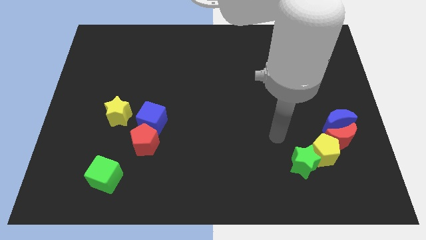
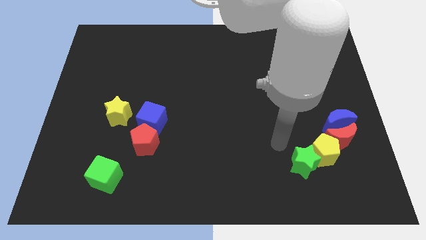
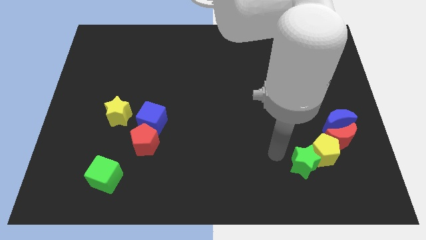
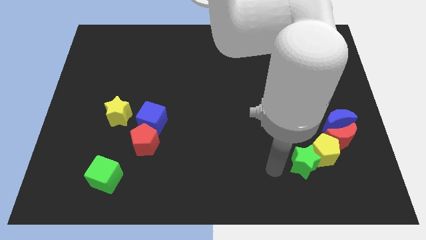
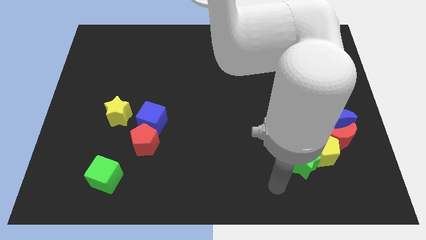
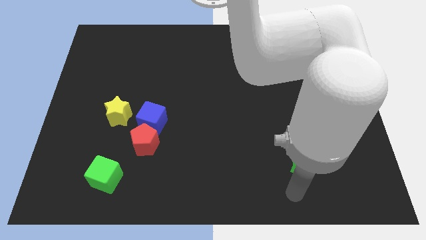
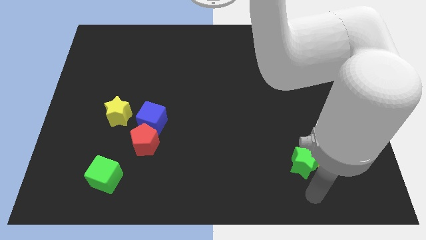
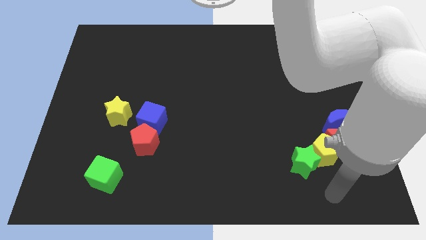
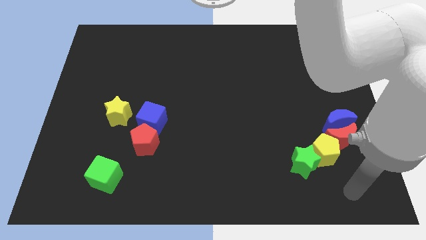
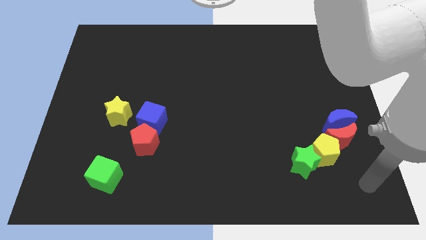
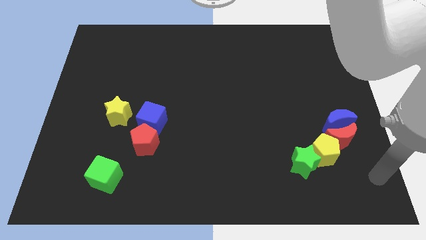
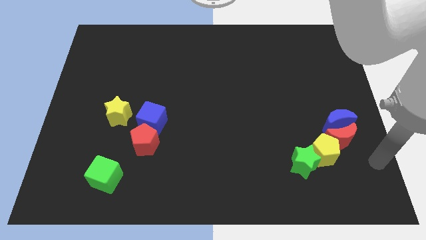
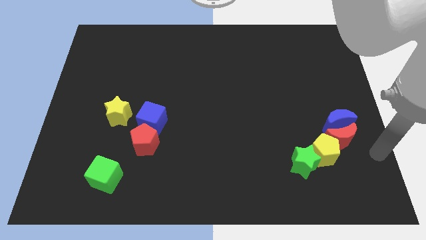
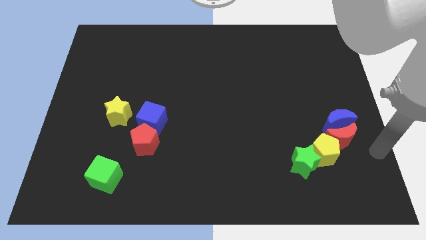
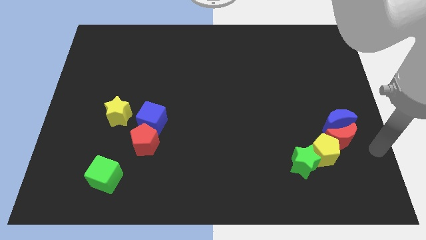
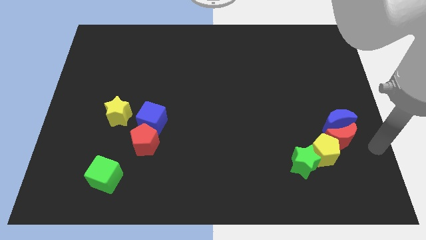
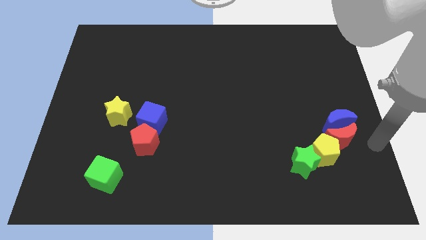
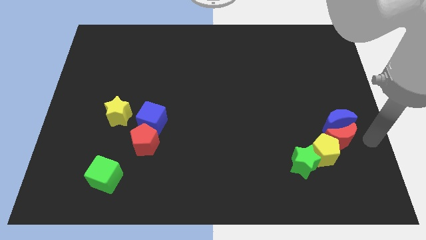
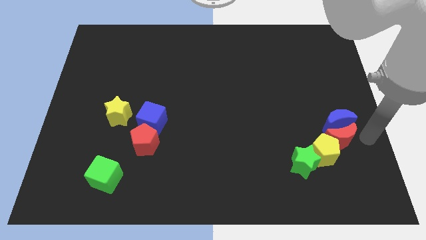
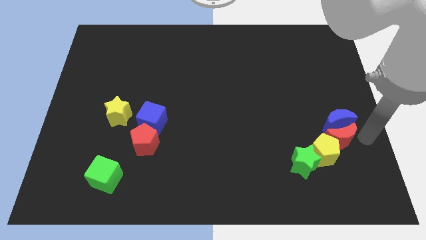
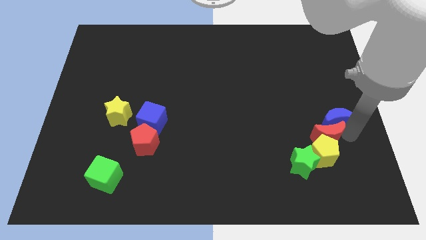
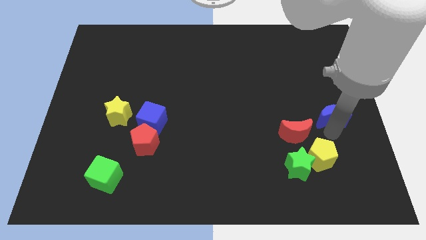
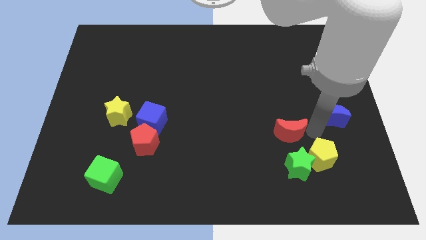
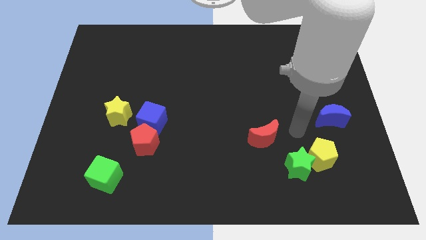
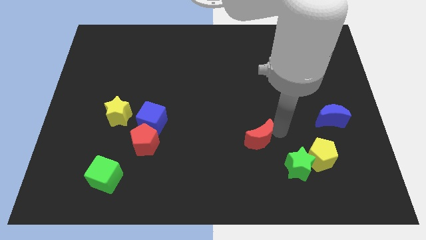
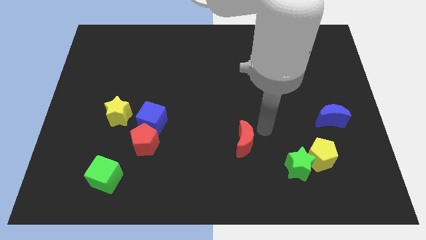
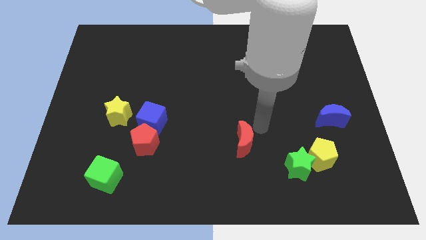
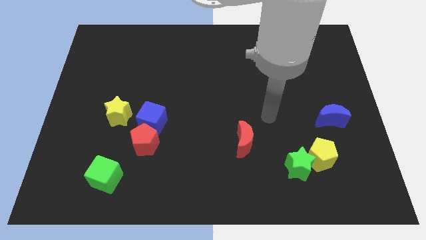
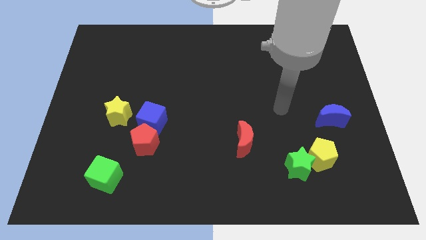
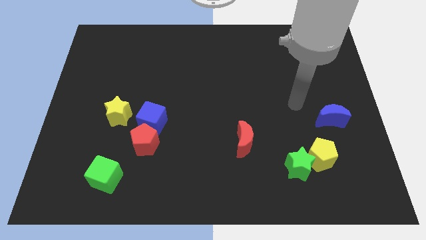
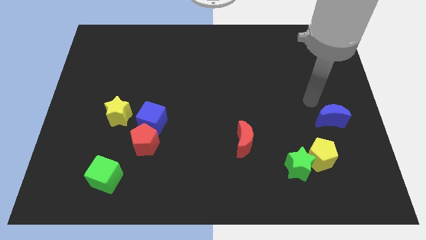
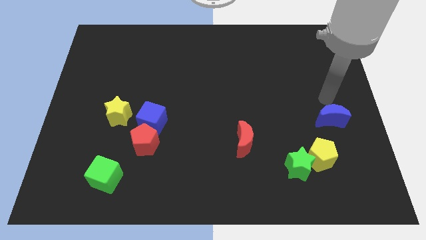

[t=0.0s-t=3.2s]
move red crescent towards the bottom center of the board

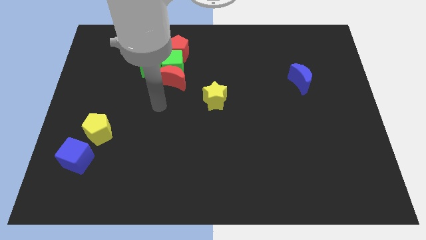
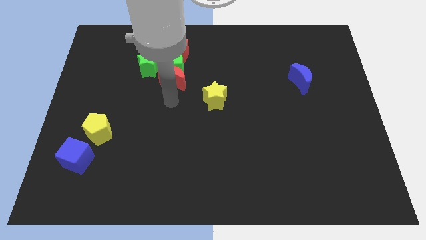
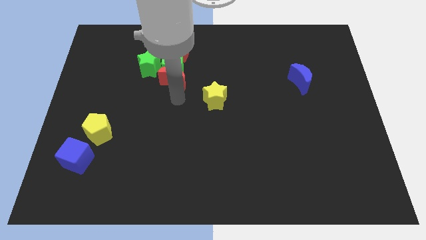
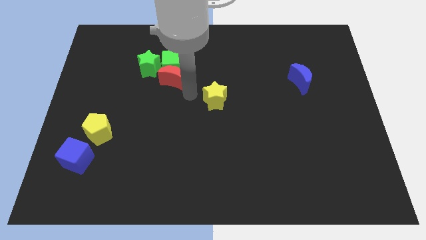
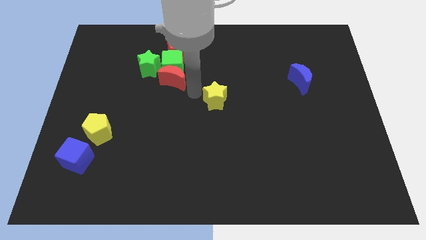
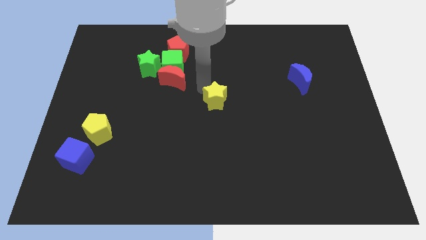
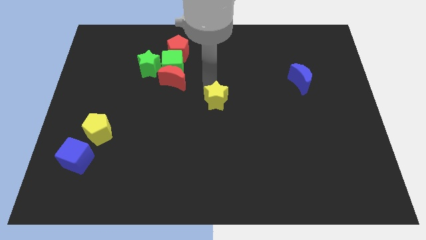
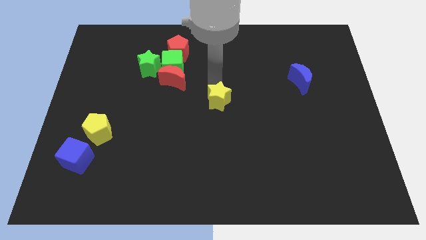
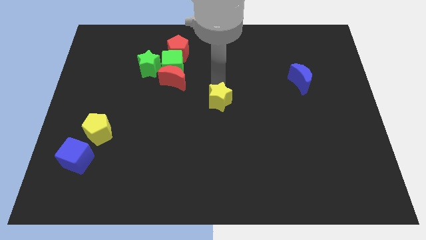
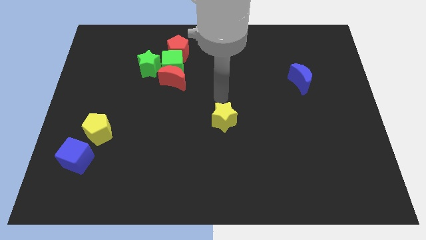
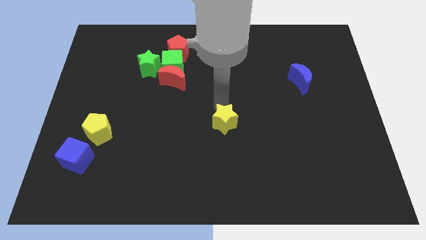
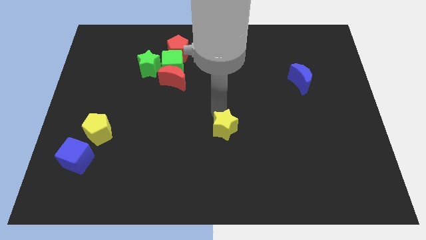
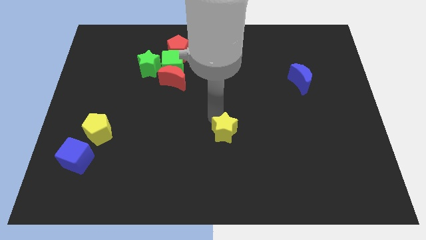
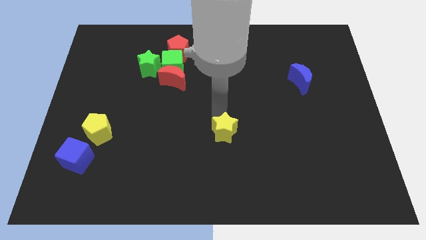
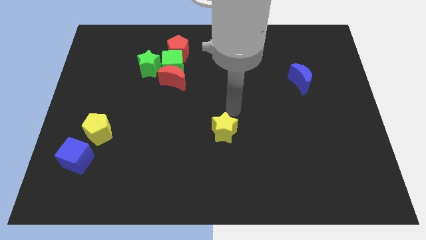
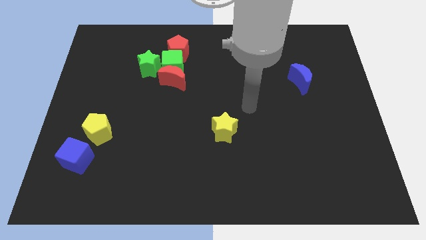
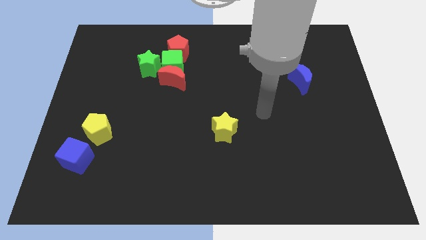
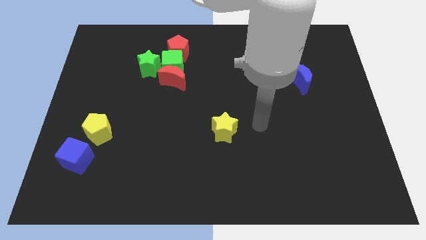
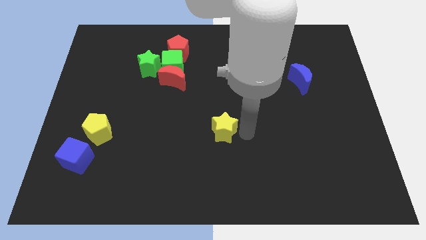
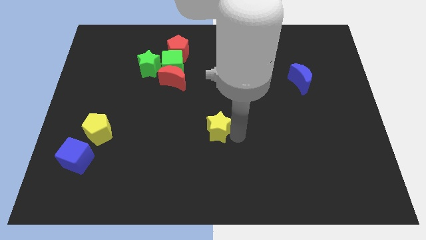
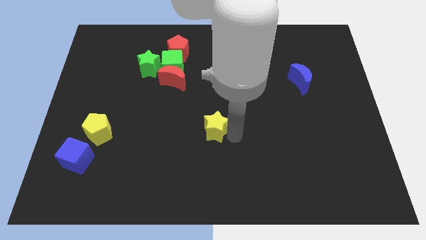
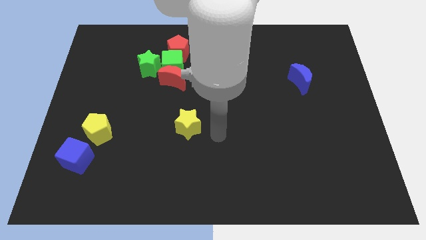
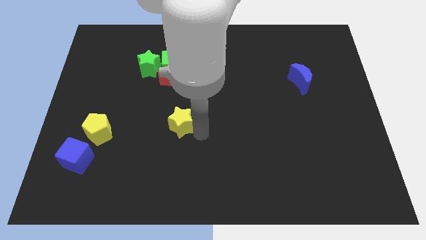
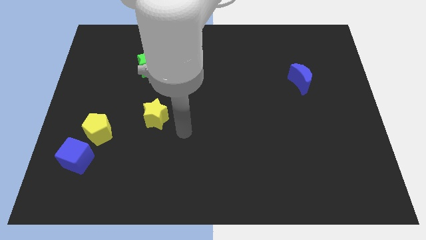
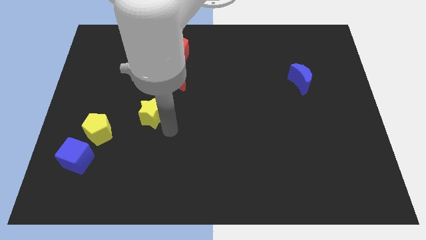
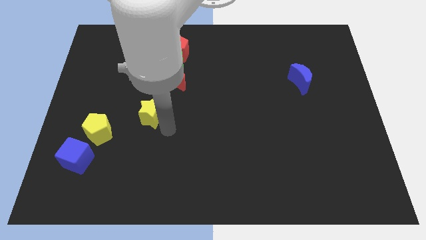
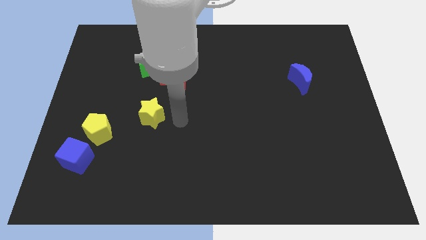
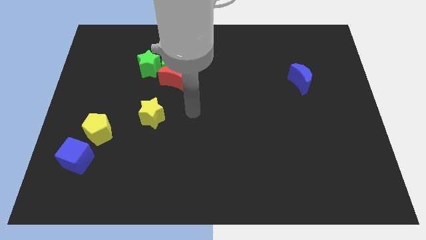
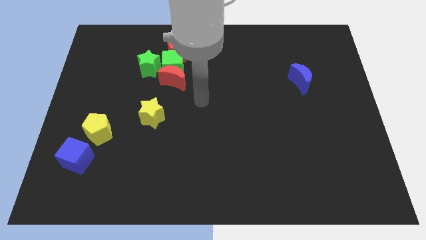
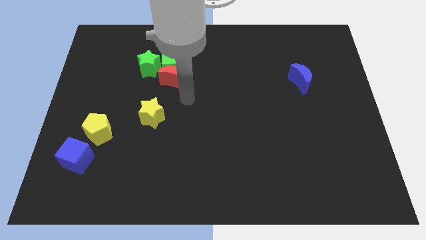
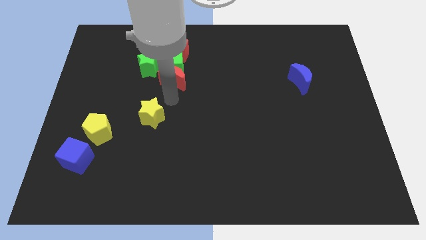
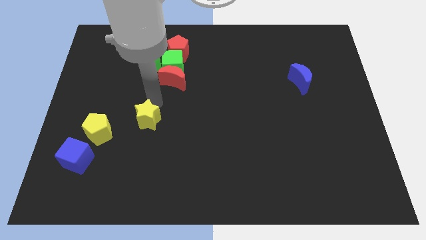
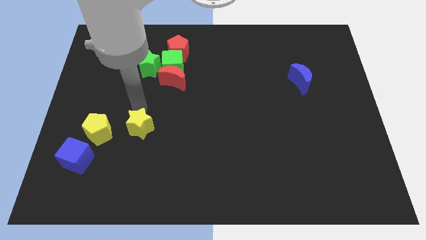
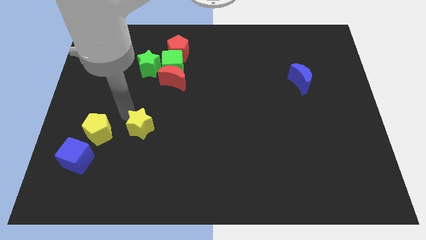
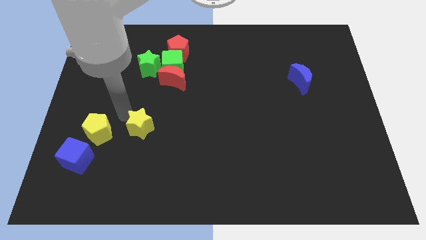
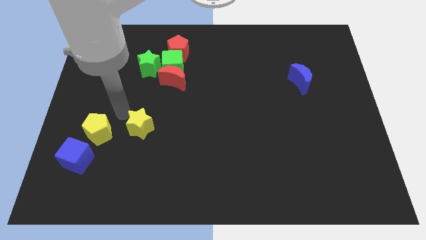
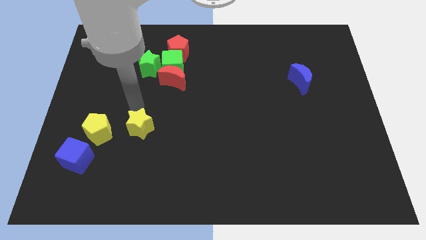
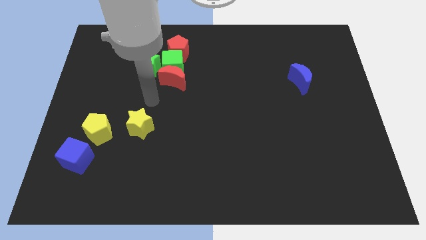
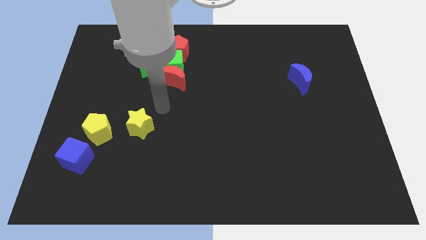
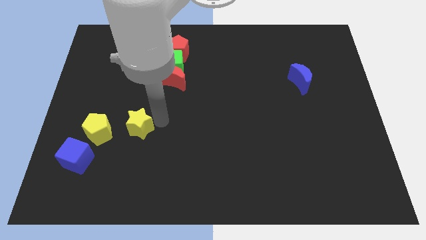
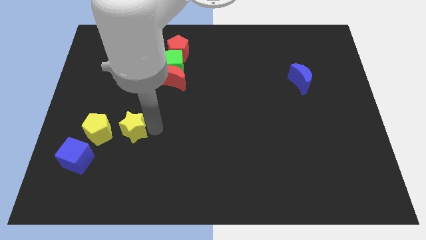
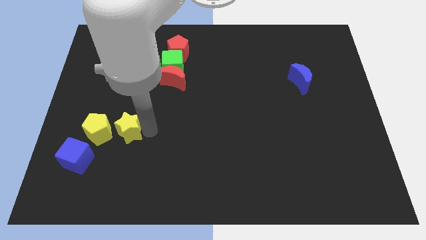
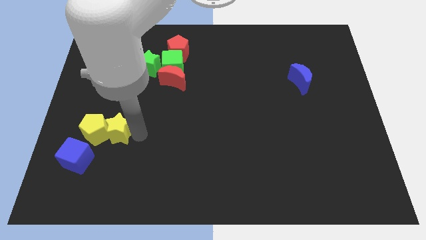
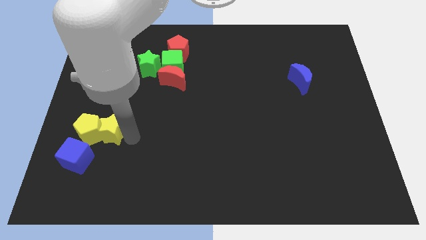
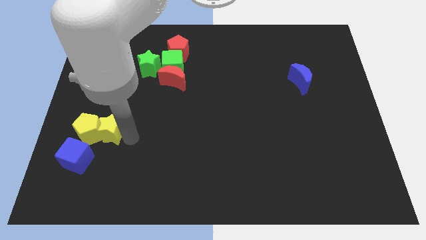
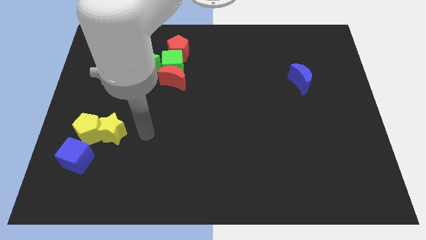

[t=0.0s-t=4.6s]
push the yellow star into the yellow pentagon

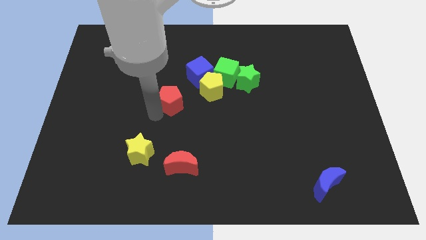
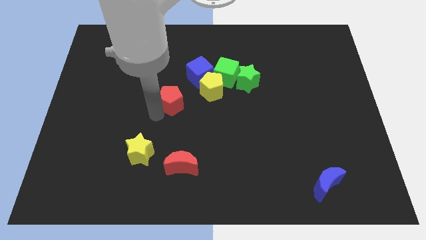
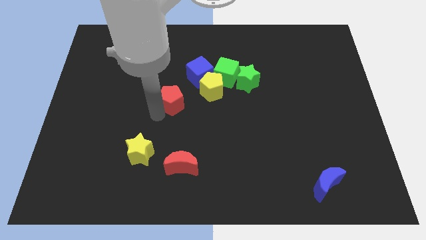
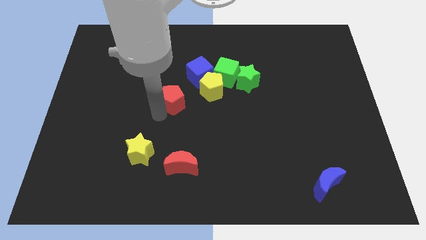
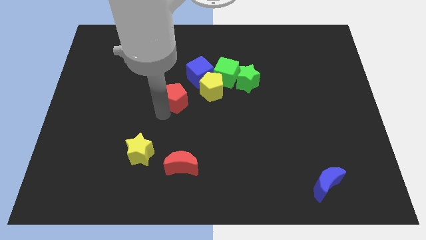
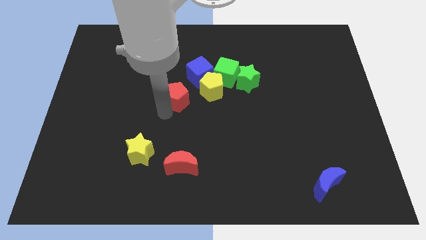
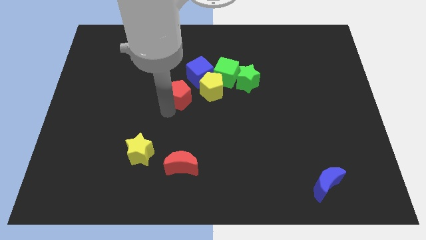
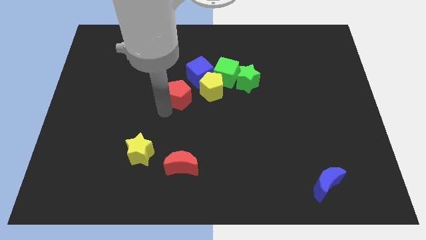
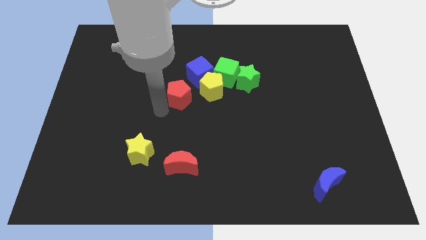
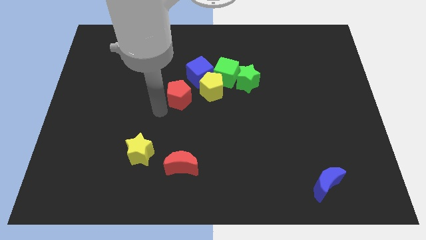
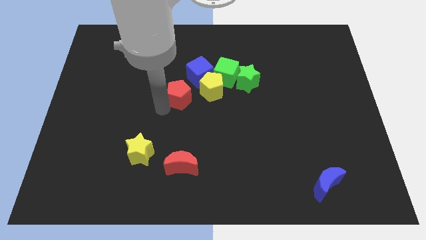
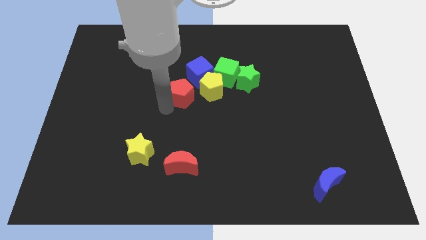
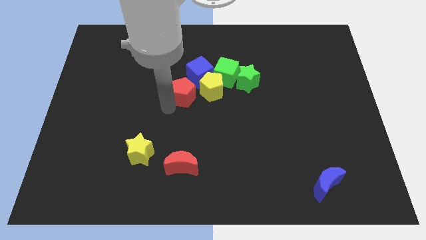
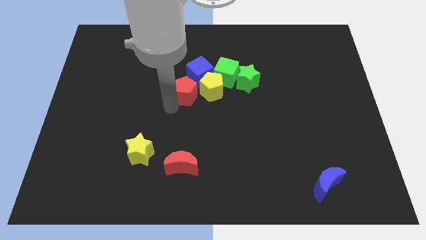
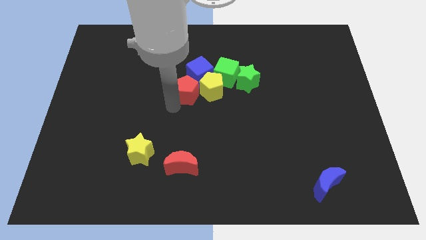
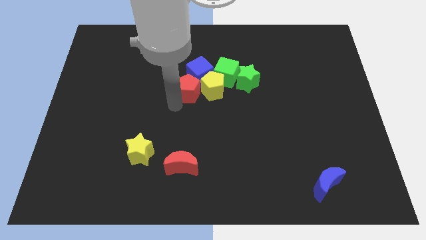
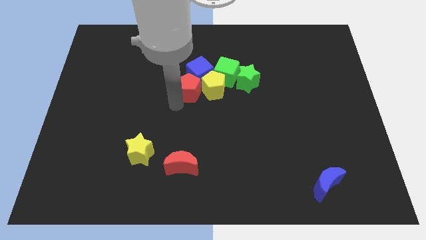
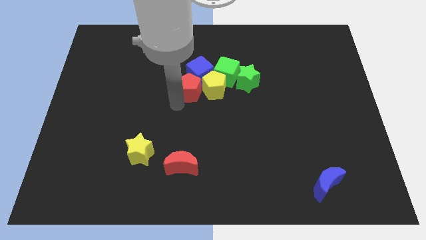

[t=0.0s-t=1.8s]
move the red pentagon into the blue cube
